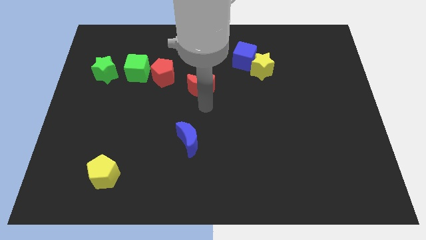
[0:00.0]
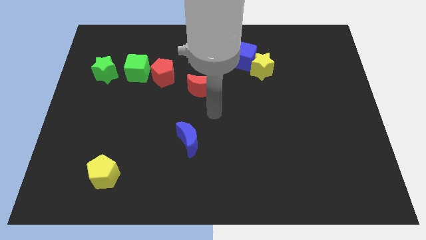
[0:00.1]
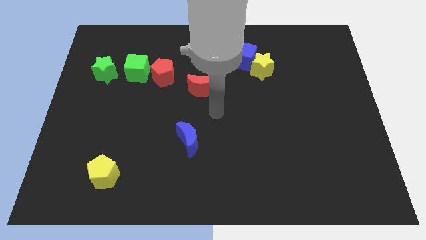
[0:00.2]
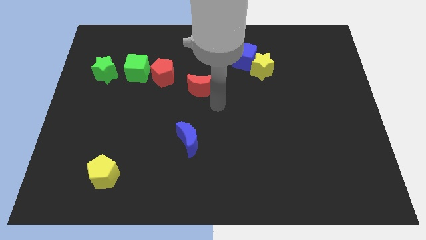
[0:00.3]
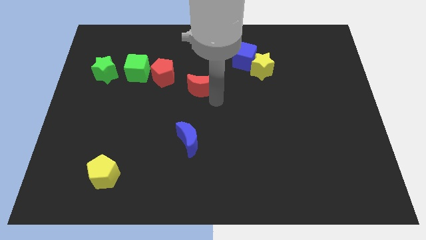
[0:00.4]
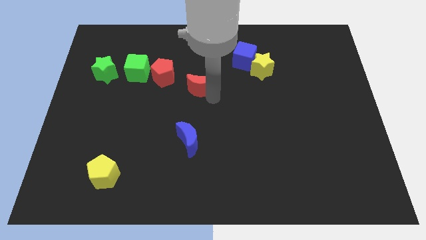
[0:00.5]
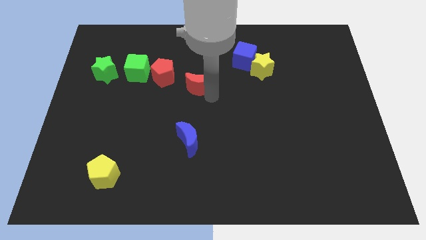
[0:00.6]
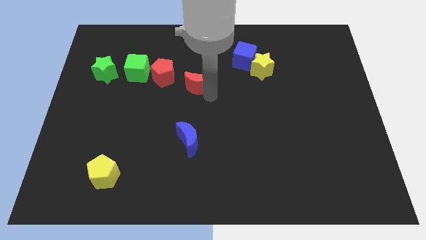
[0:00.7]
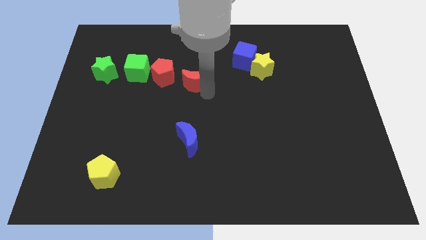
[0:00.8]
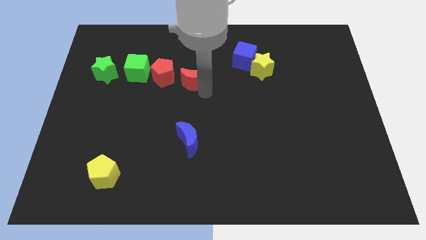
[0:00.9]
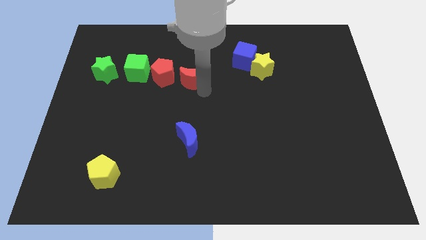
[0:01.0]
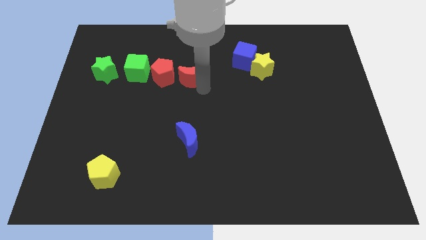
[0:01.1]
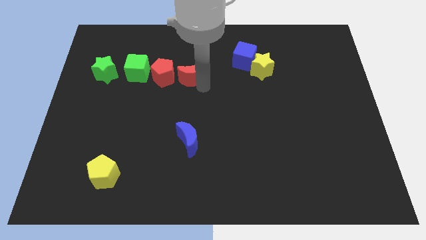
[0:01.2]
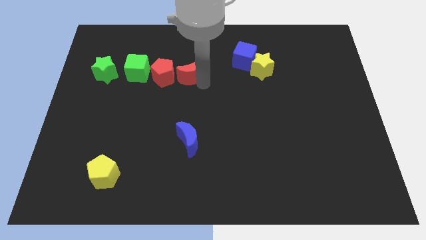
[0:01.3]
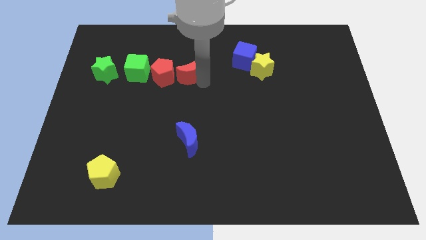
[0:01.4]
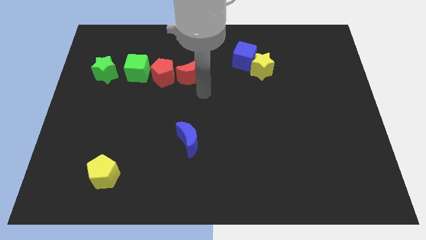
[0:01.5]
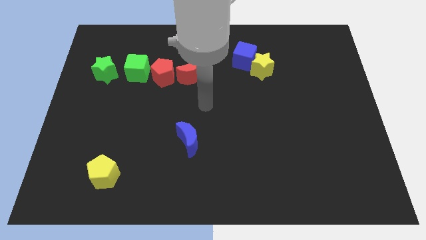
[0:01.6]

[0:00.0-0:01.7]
place the red moon to right side of the red pentagon

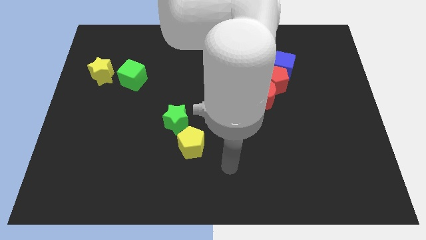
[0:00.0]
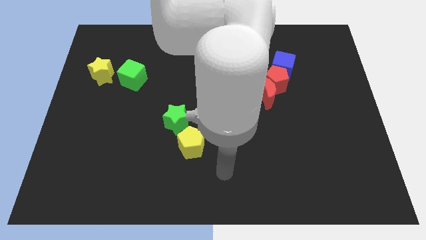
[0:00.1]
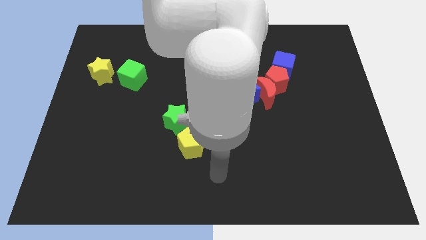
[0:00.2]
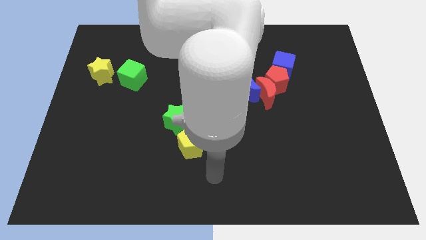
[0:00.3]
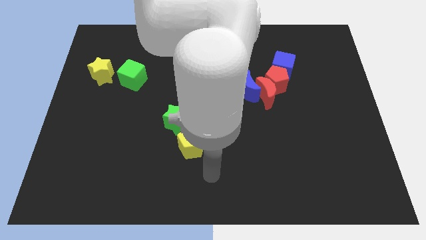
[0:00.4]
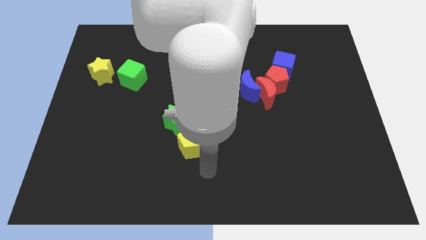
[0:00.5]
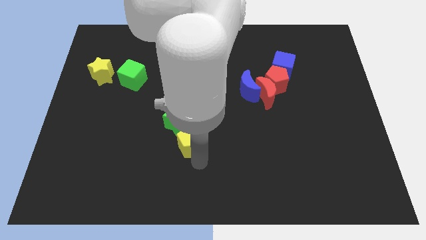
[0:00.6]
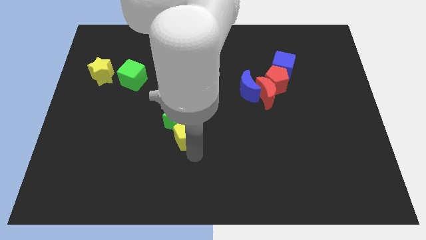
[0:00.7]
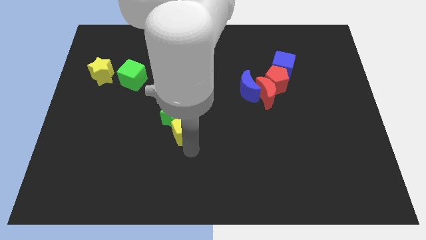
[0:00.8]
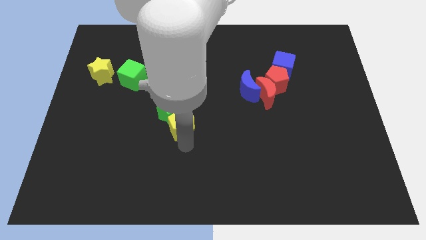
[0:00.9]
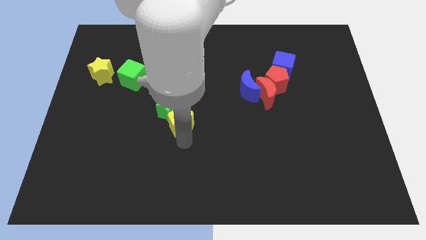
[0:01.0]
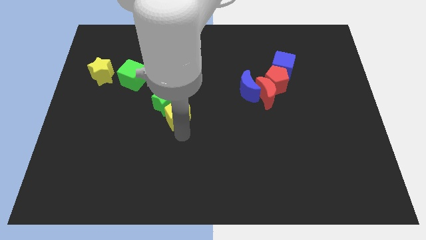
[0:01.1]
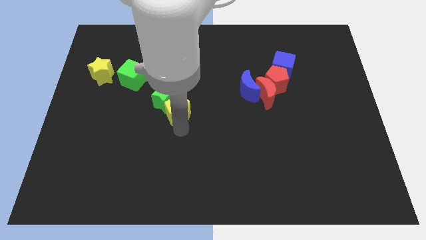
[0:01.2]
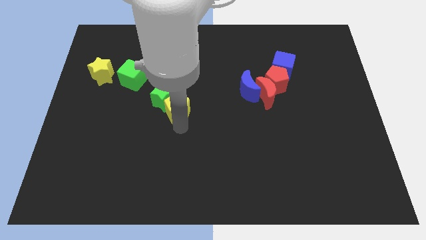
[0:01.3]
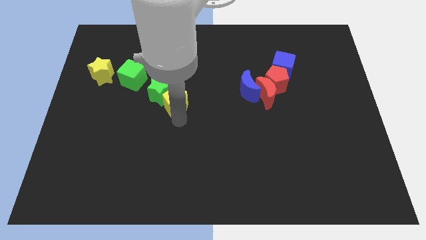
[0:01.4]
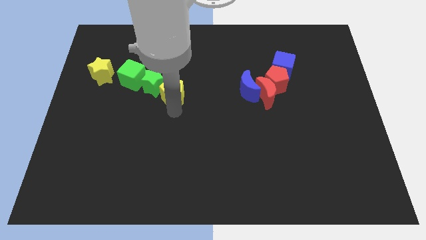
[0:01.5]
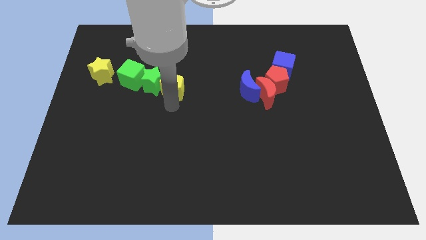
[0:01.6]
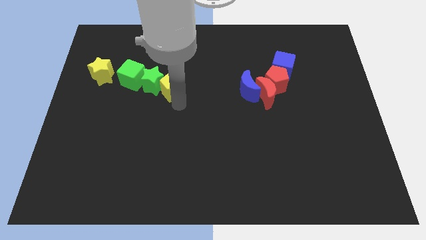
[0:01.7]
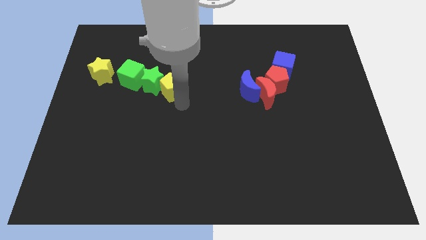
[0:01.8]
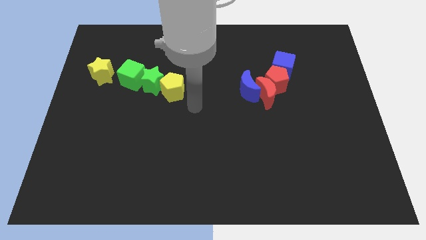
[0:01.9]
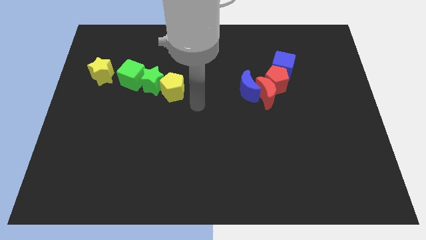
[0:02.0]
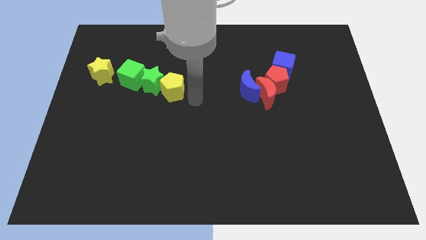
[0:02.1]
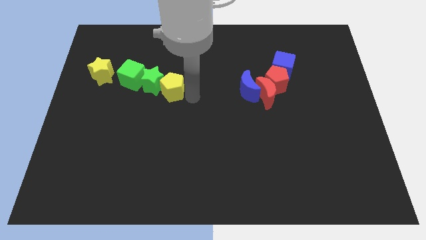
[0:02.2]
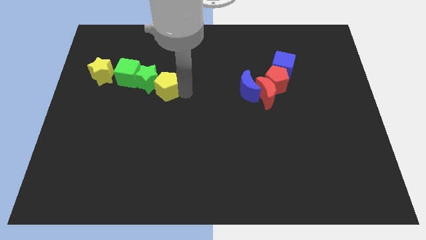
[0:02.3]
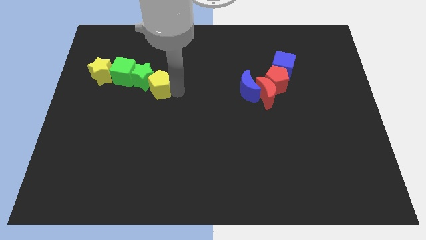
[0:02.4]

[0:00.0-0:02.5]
move green star and yellow pentagon to form a horizontal row

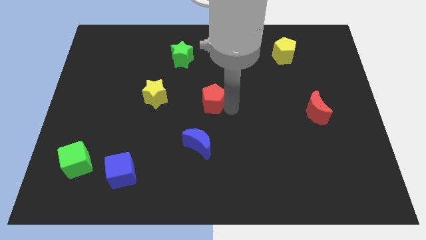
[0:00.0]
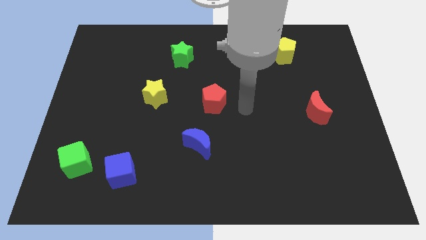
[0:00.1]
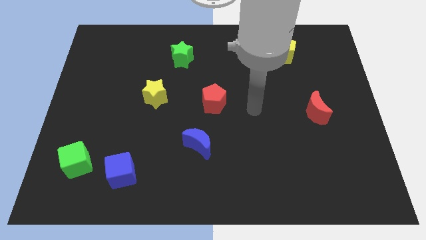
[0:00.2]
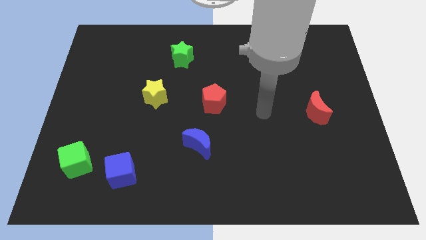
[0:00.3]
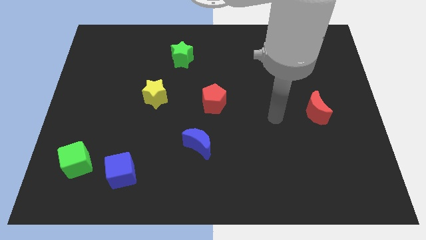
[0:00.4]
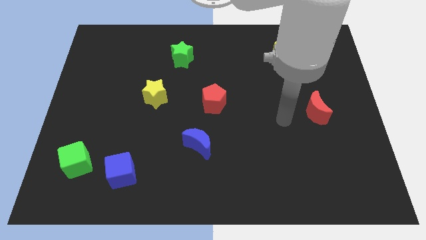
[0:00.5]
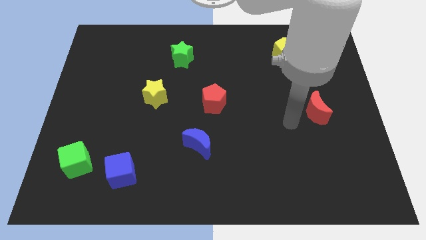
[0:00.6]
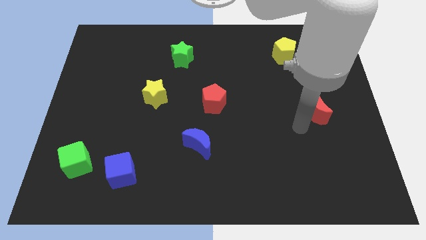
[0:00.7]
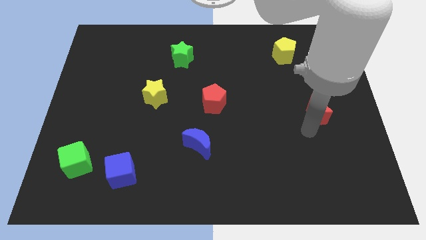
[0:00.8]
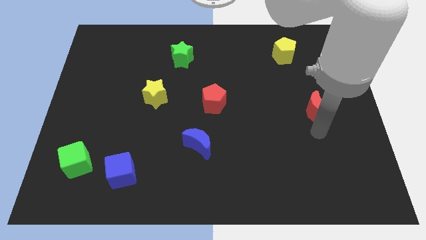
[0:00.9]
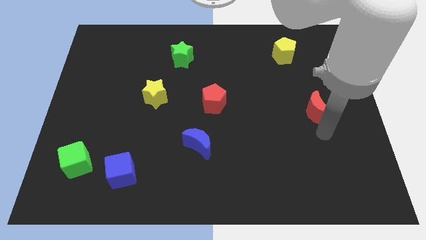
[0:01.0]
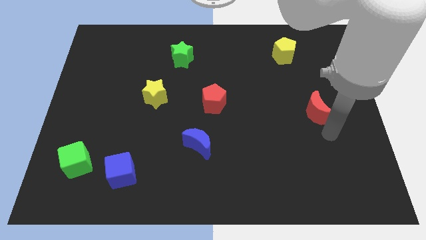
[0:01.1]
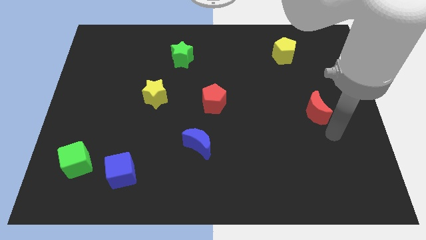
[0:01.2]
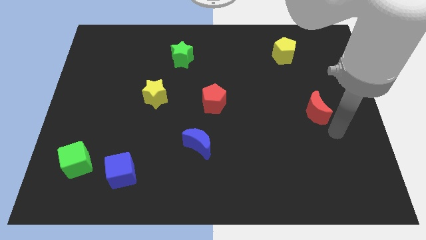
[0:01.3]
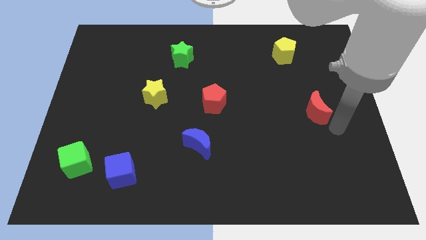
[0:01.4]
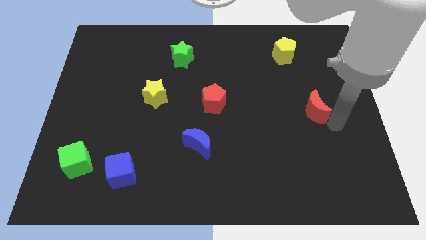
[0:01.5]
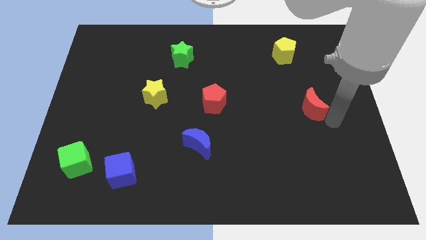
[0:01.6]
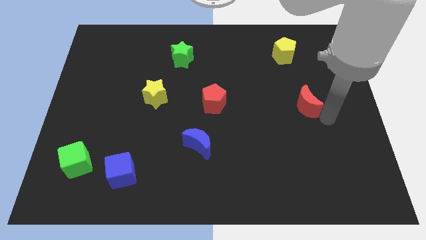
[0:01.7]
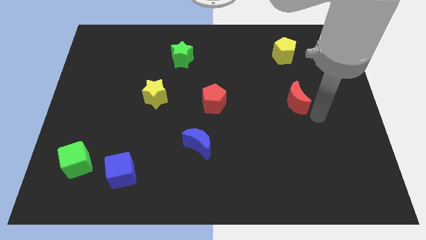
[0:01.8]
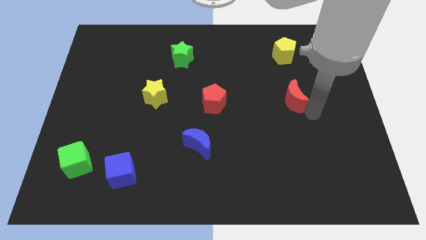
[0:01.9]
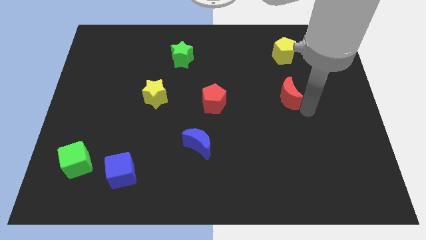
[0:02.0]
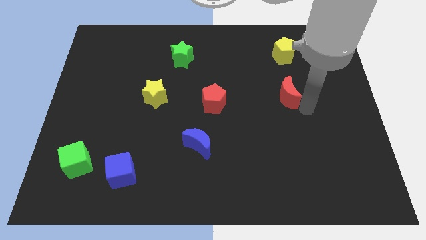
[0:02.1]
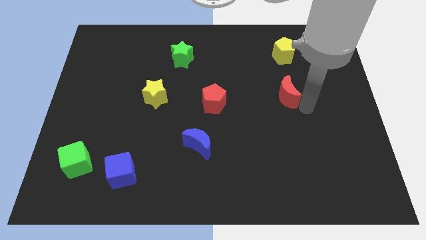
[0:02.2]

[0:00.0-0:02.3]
push the red crescent to the bottom of the yellow pentagon

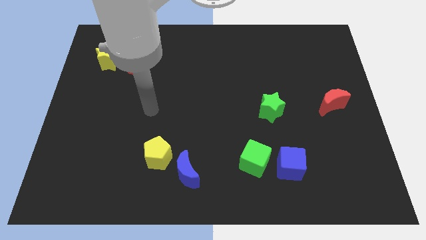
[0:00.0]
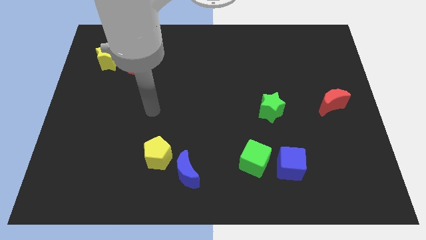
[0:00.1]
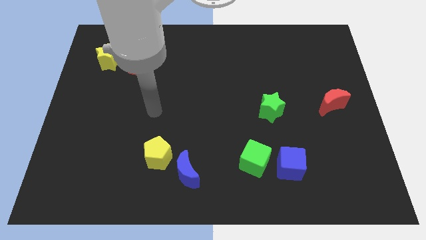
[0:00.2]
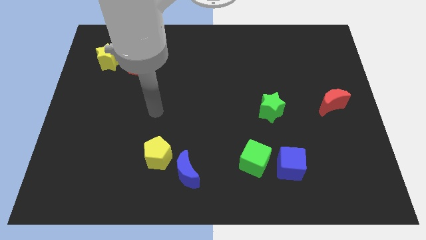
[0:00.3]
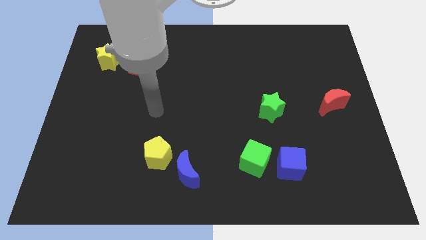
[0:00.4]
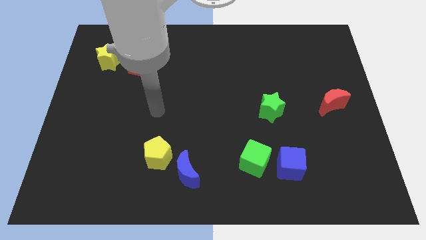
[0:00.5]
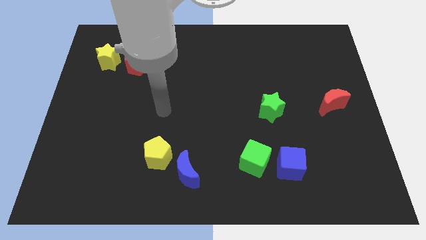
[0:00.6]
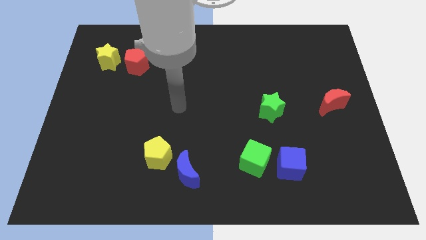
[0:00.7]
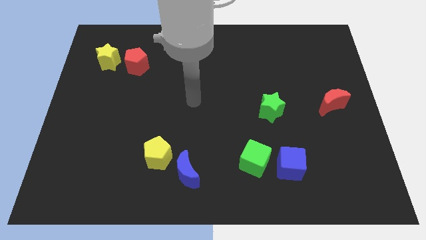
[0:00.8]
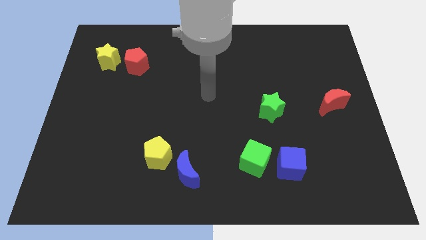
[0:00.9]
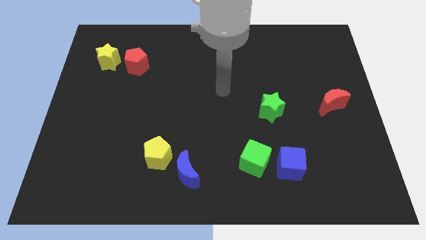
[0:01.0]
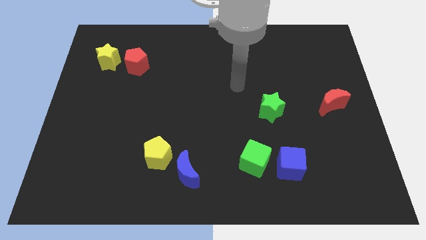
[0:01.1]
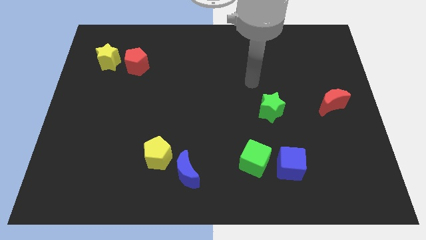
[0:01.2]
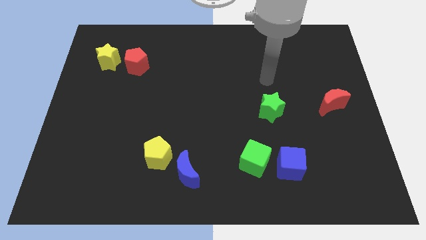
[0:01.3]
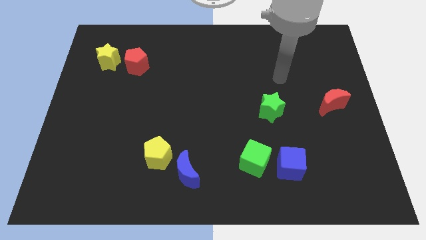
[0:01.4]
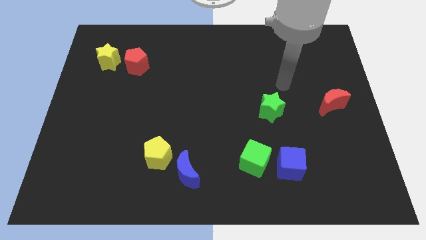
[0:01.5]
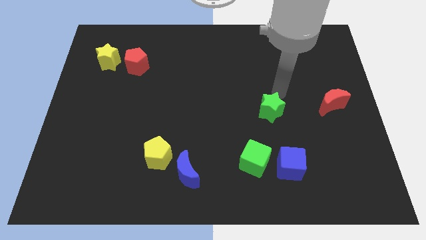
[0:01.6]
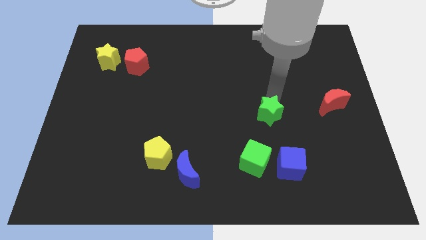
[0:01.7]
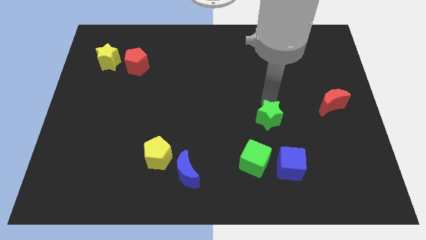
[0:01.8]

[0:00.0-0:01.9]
place your arm above the green star

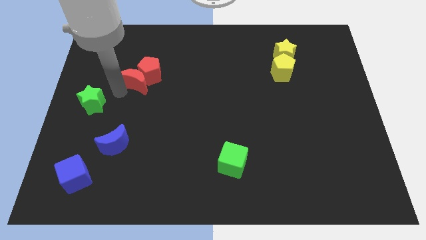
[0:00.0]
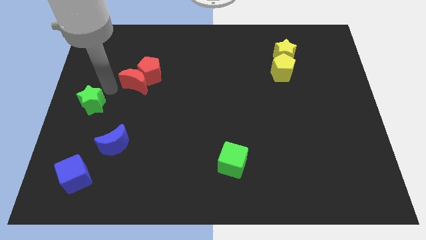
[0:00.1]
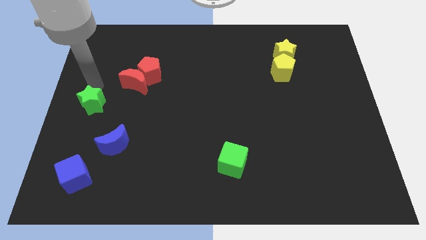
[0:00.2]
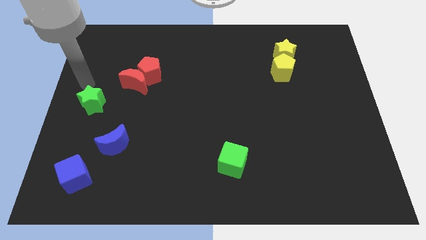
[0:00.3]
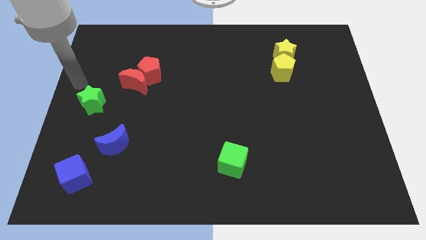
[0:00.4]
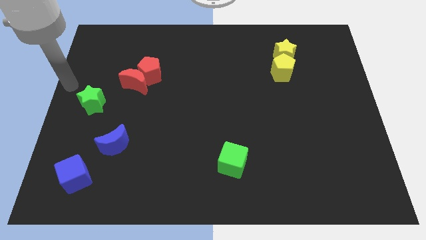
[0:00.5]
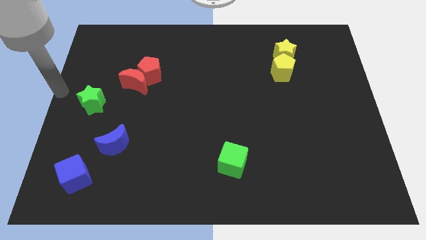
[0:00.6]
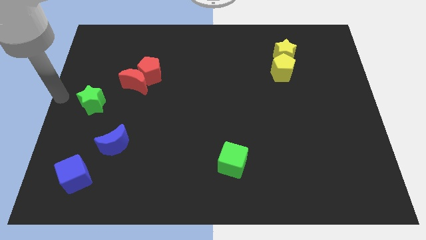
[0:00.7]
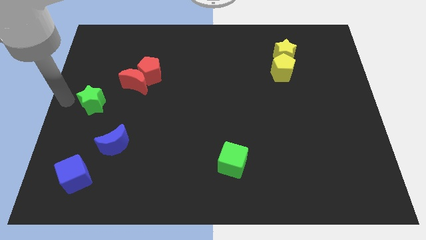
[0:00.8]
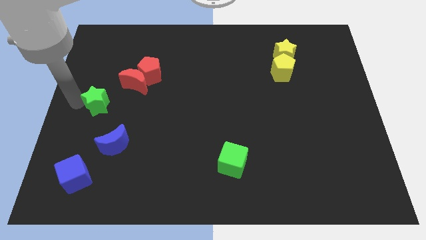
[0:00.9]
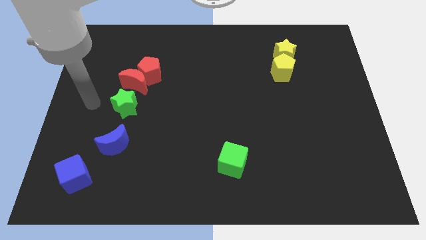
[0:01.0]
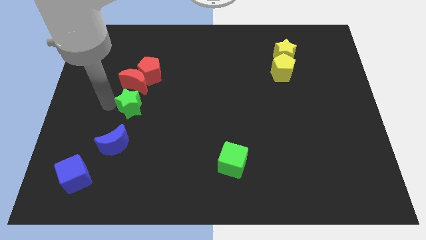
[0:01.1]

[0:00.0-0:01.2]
move the arm towards the green star
